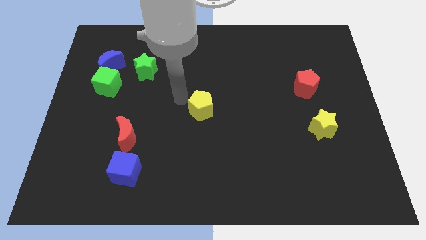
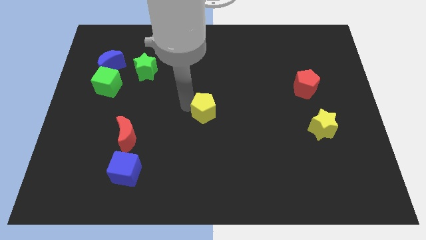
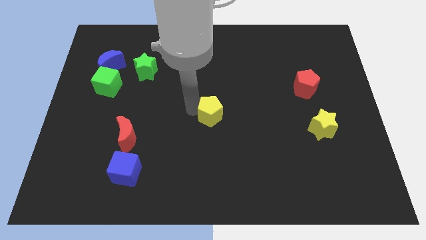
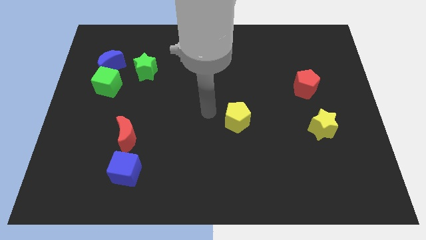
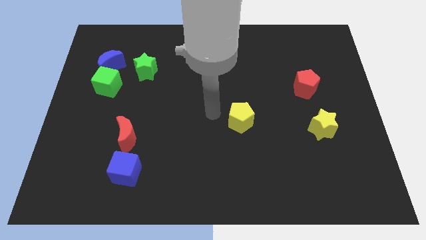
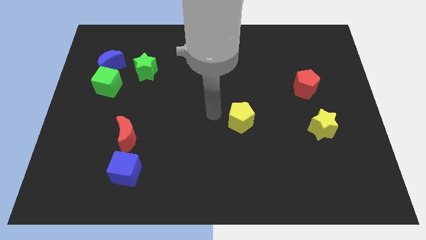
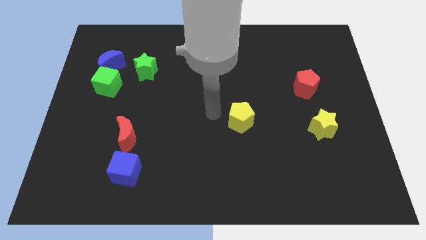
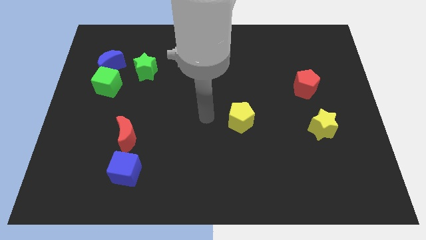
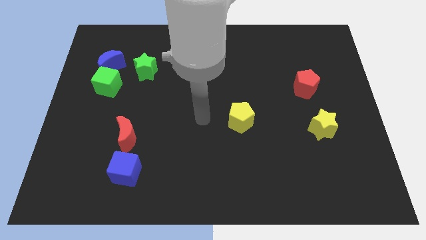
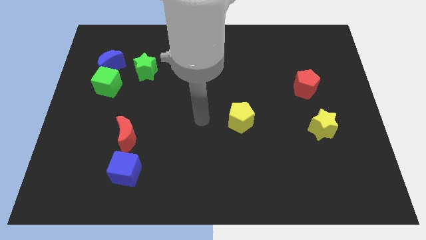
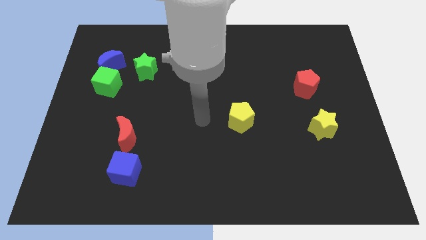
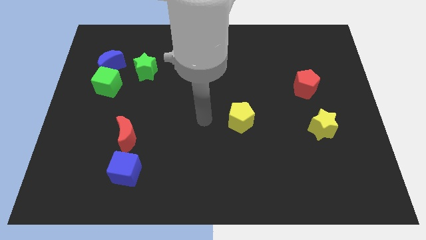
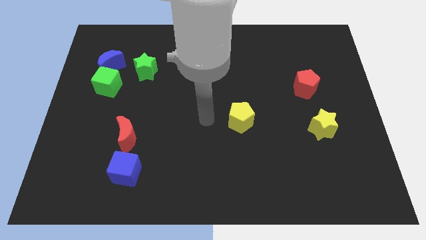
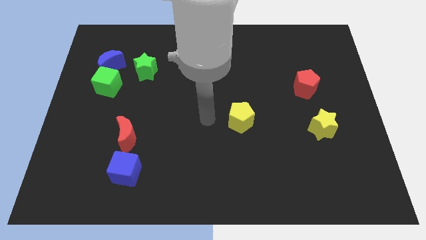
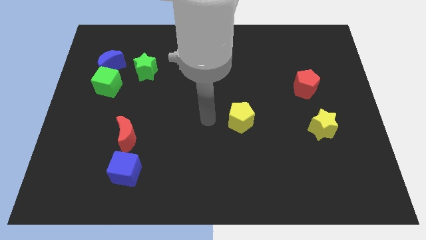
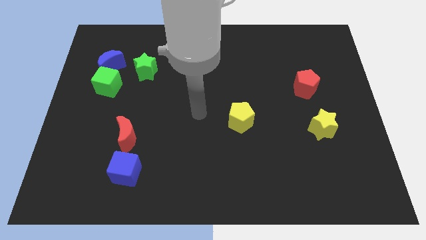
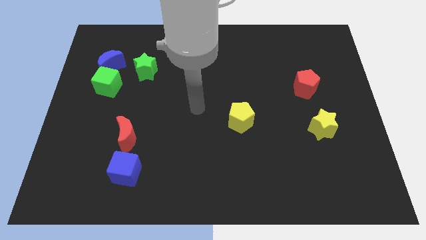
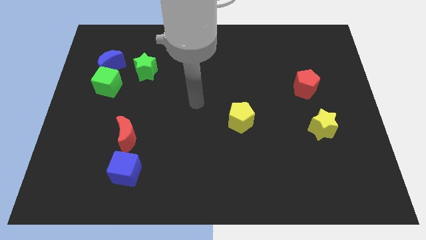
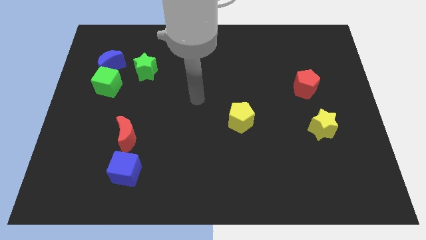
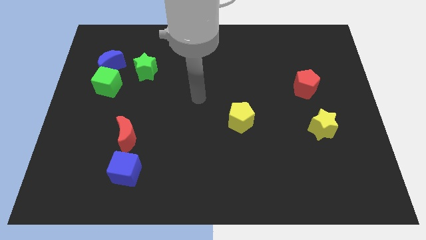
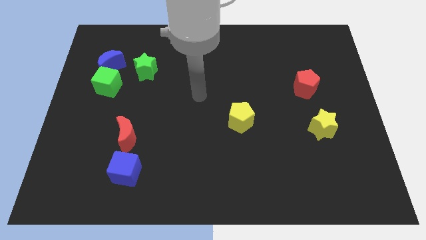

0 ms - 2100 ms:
place the yellow pentagon to the left side of the yellow star

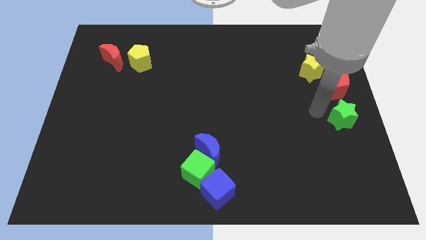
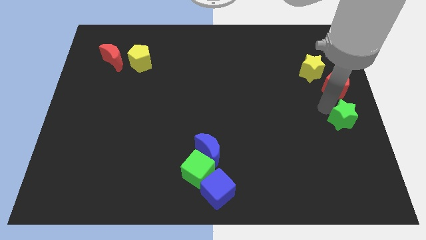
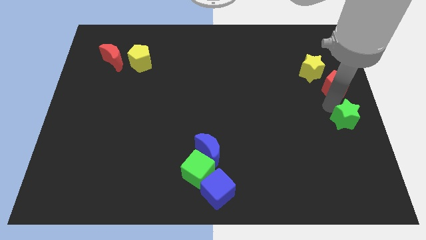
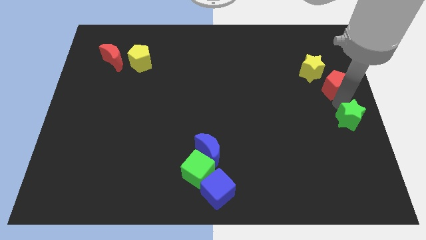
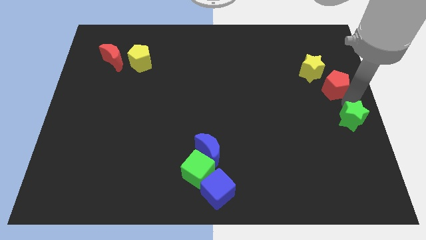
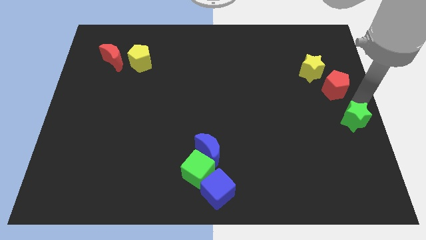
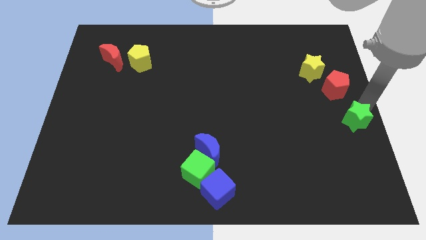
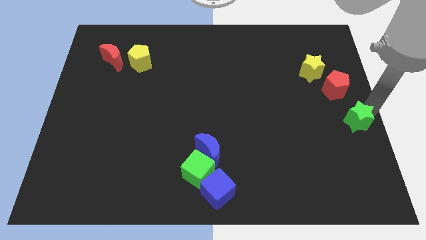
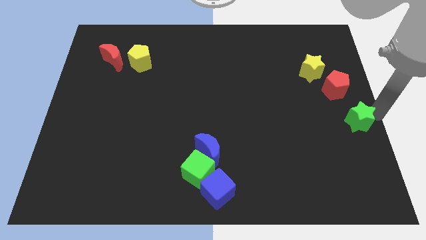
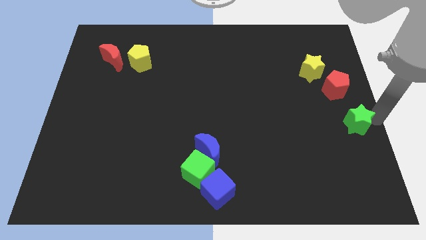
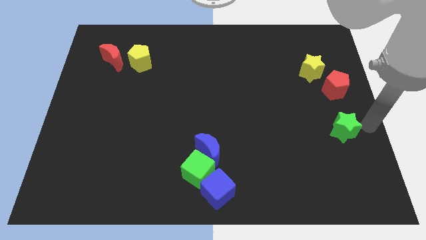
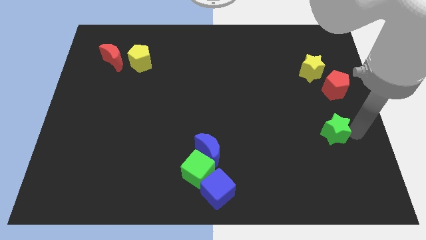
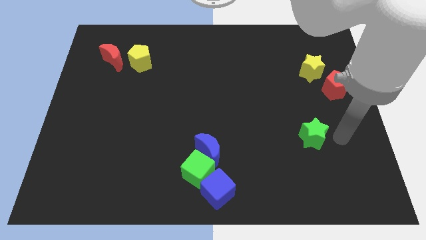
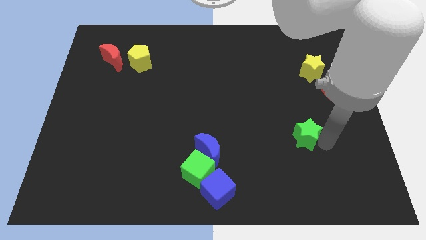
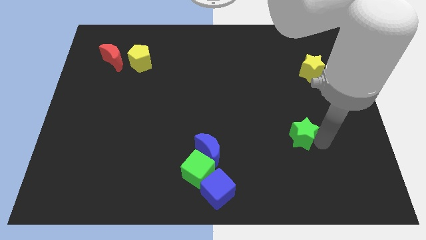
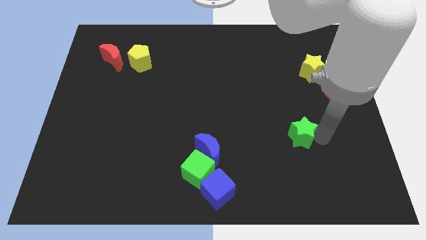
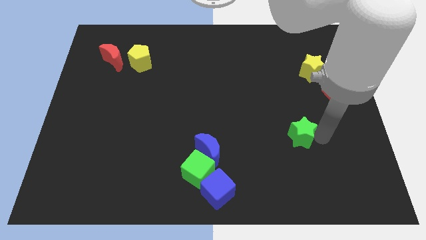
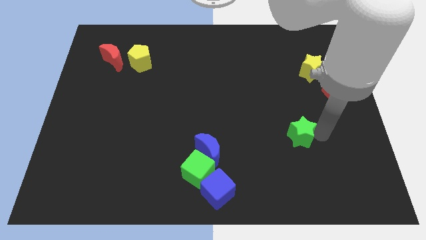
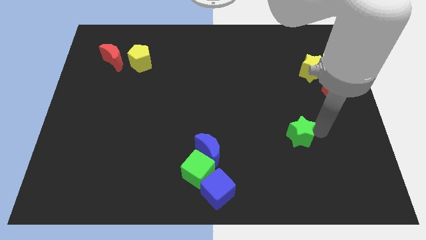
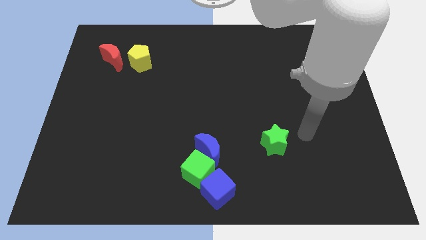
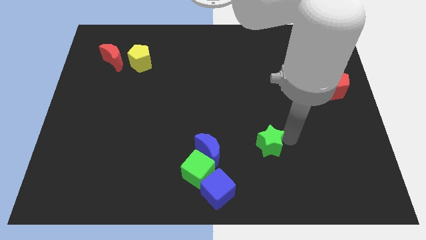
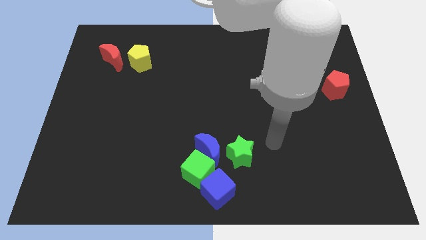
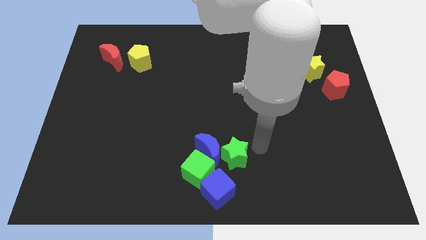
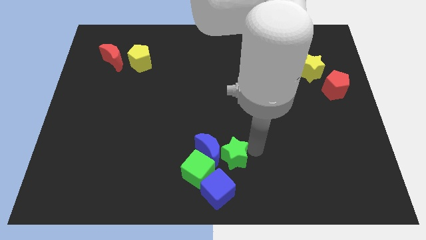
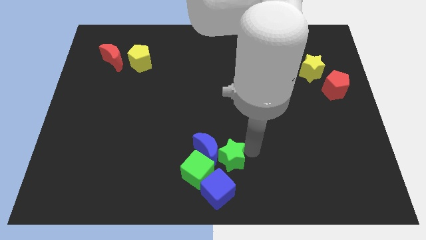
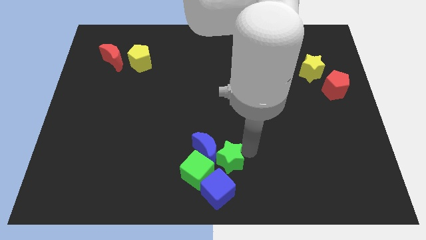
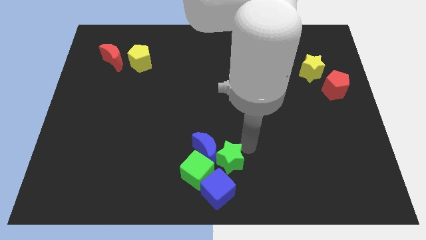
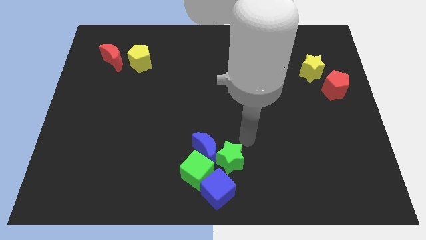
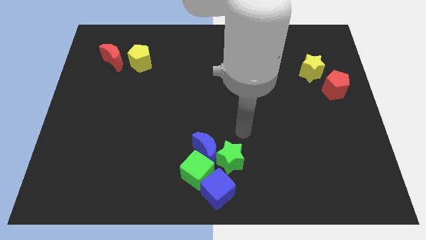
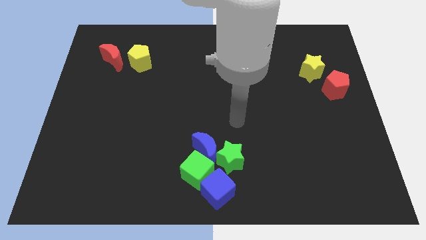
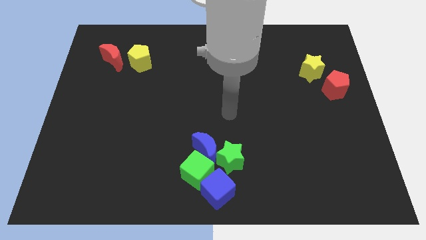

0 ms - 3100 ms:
push the green star in between the blue blocks

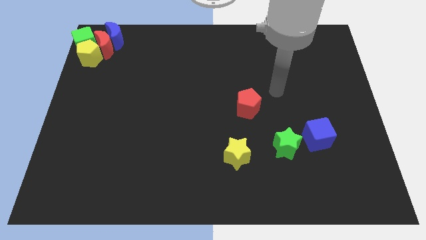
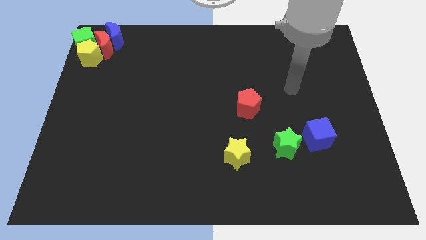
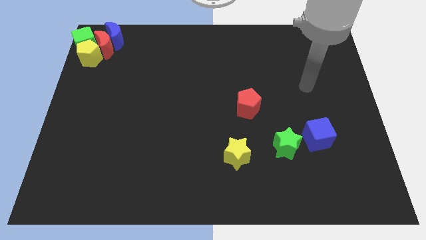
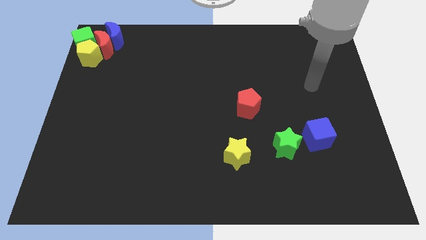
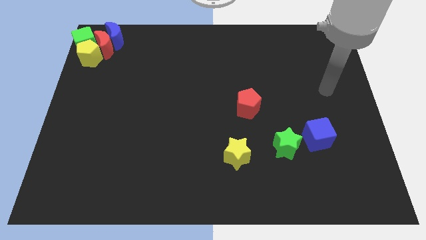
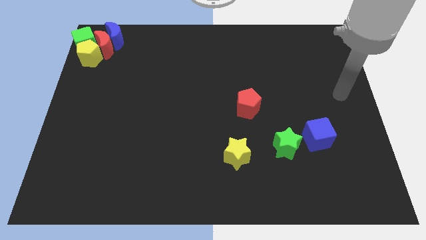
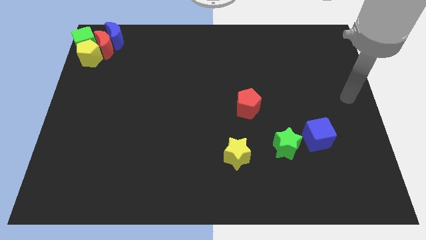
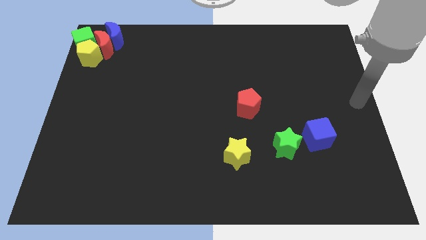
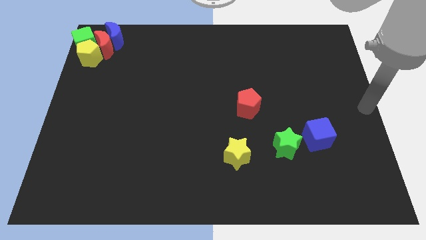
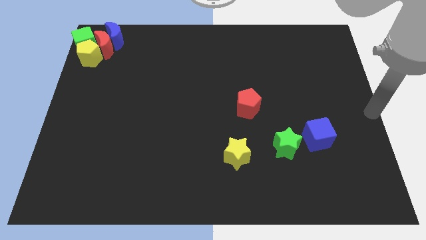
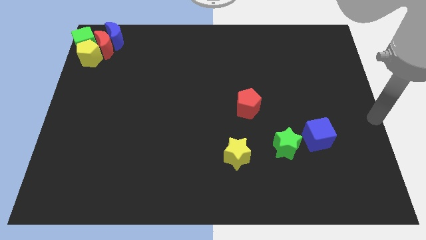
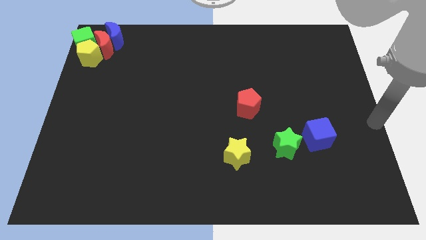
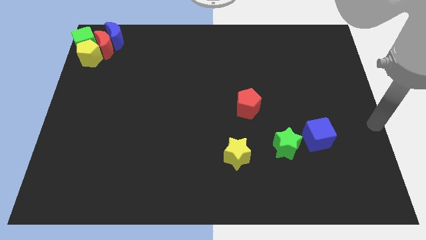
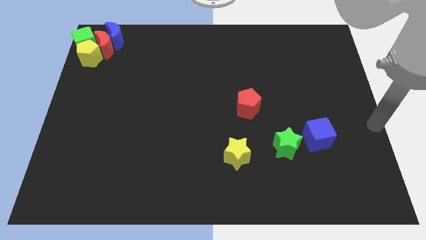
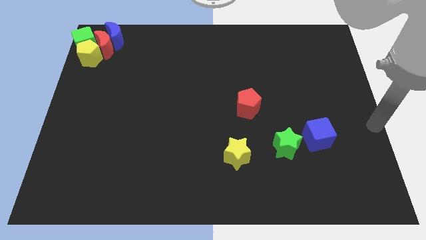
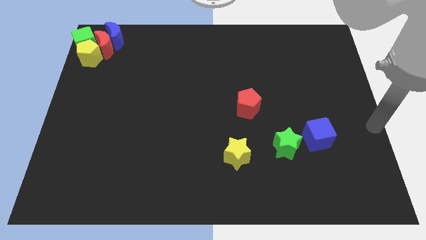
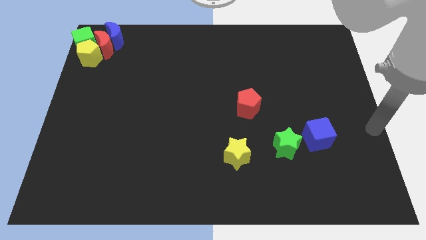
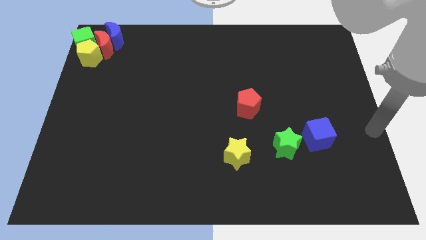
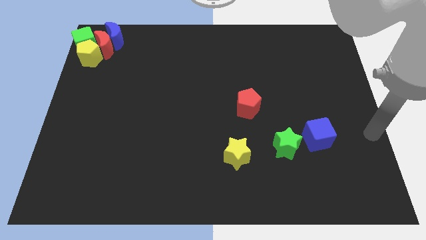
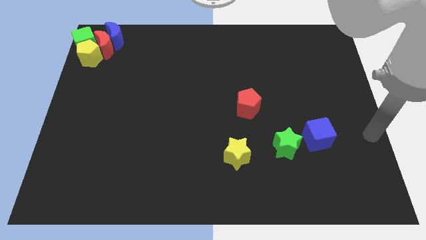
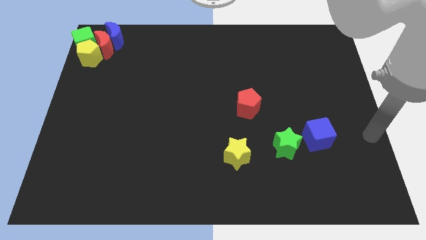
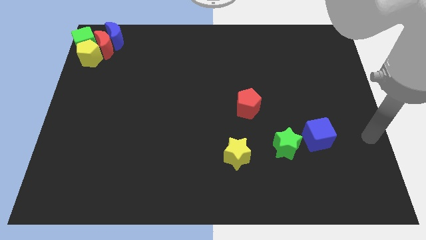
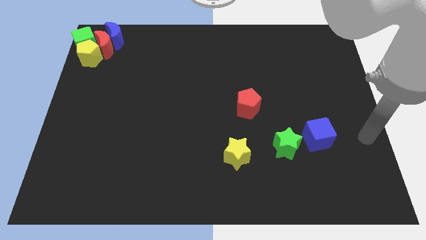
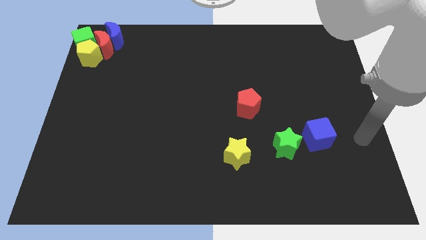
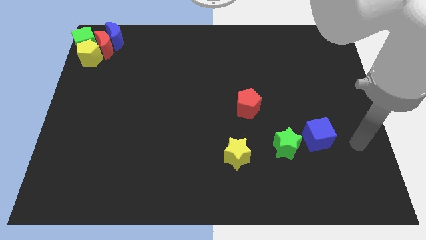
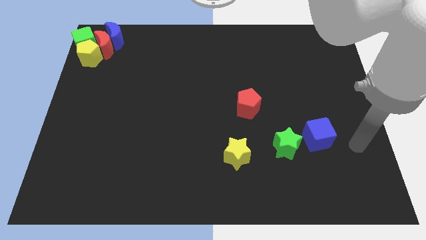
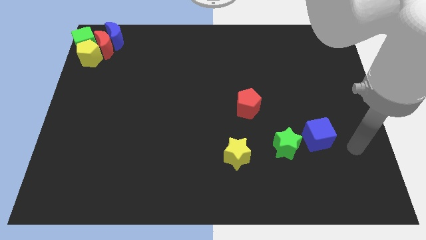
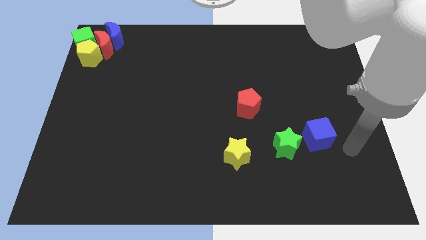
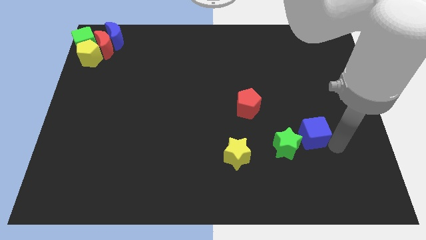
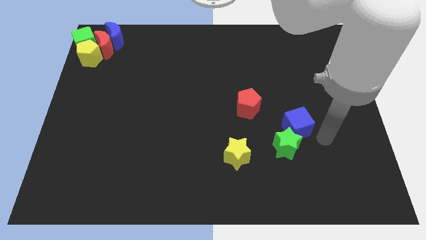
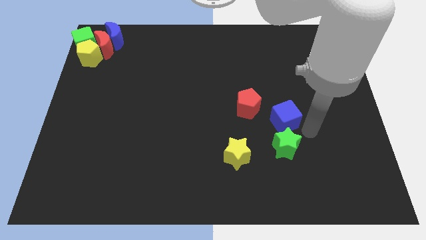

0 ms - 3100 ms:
slide the blue cube up slightly

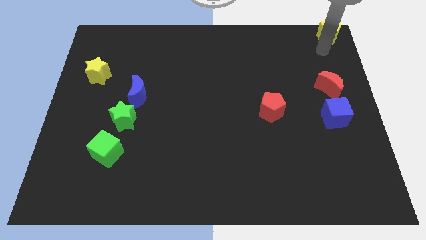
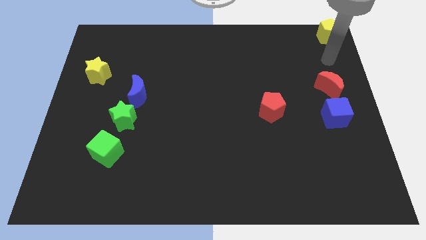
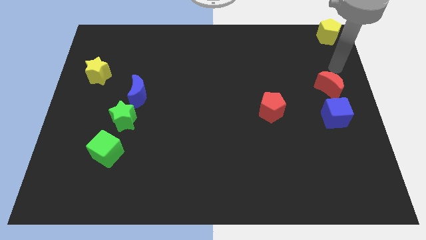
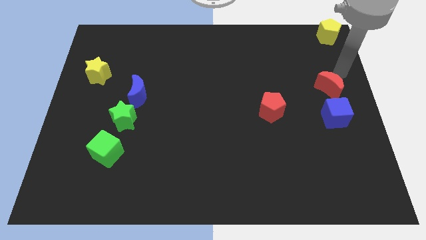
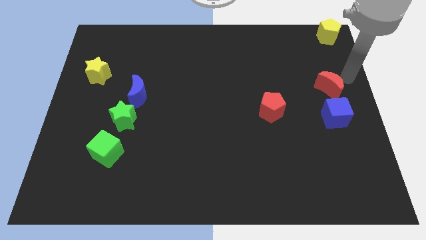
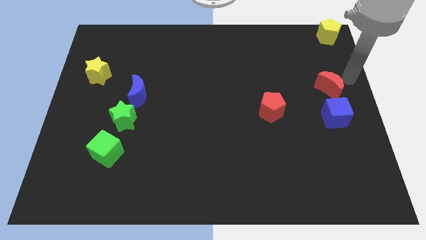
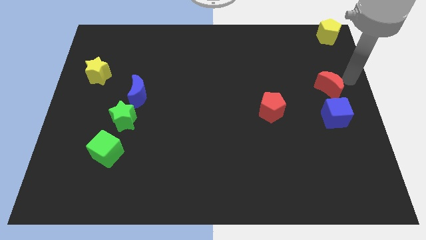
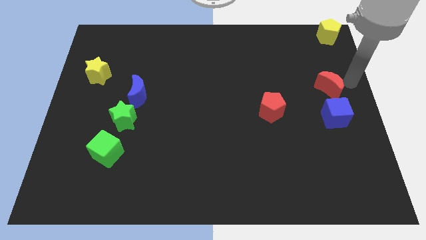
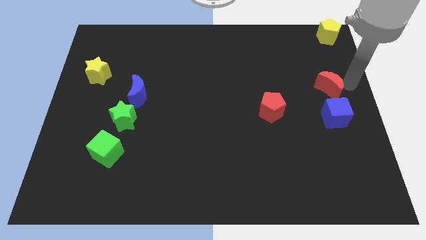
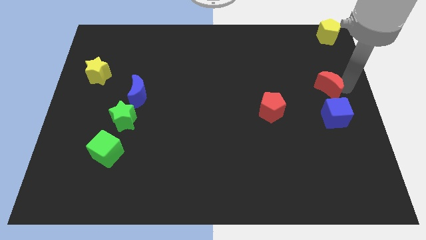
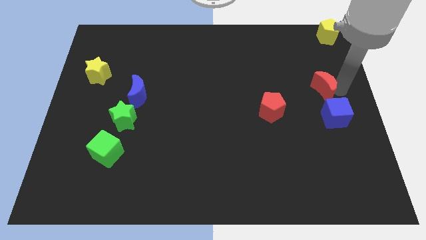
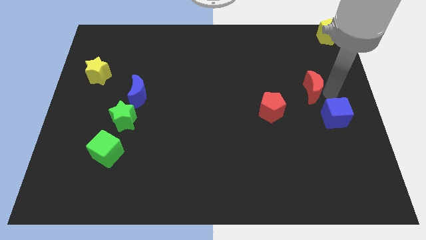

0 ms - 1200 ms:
move the arm away from the yellow pentagon
